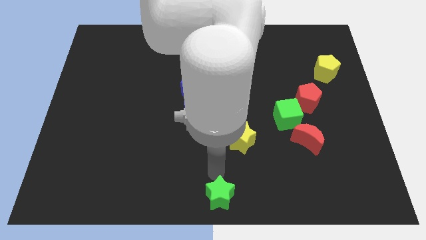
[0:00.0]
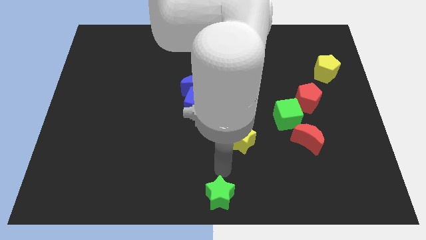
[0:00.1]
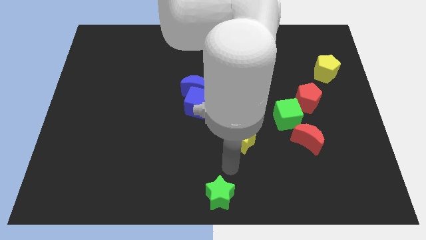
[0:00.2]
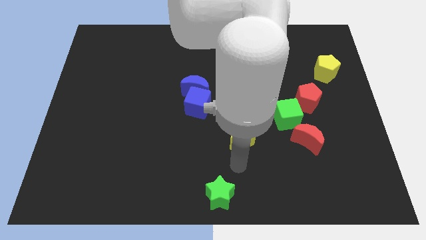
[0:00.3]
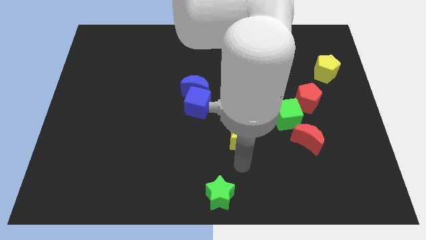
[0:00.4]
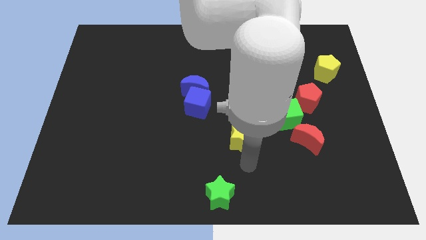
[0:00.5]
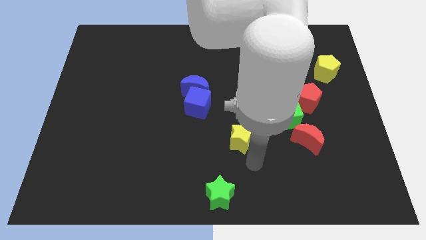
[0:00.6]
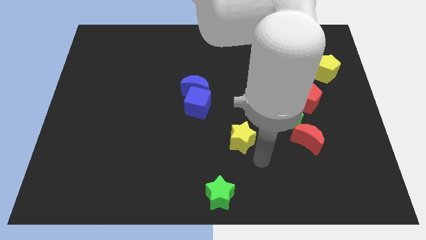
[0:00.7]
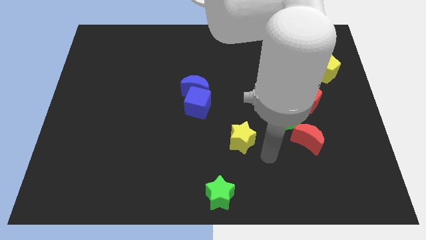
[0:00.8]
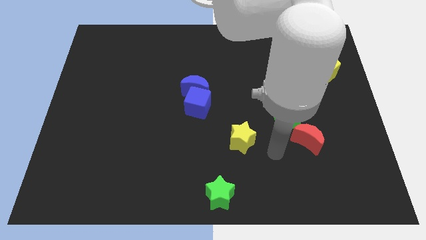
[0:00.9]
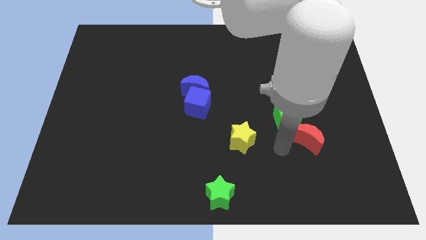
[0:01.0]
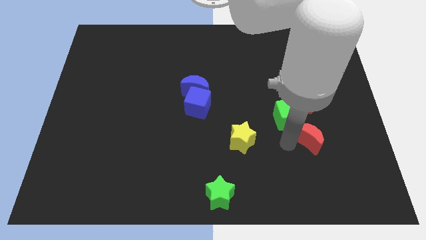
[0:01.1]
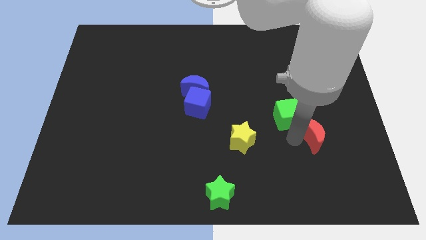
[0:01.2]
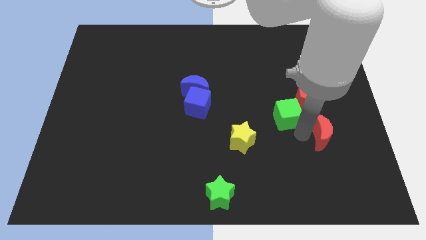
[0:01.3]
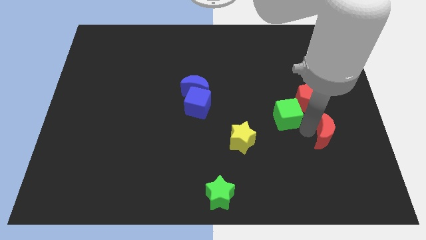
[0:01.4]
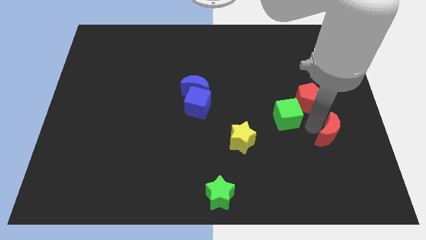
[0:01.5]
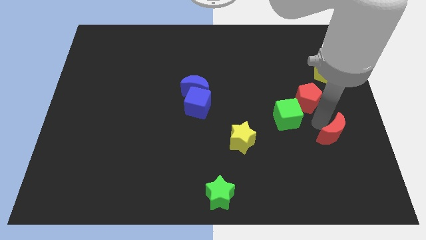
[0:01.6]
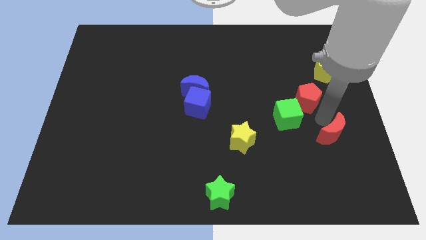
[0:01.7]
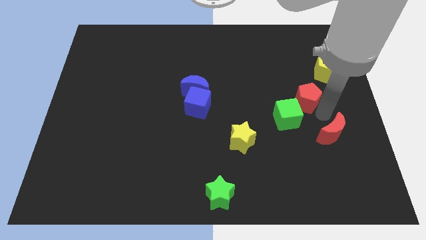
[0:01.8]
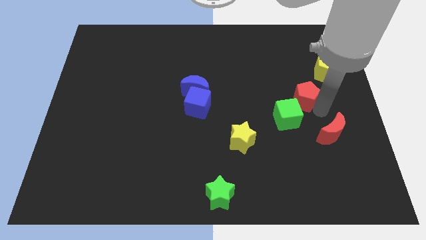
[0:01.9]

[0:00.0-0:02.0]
move the red moon slightly to the right

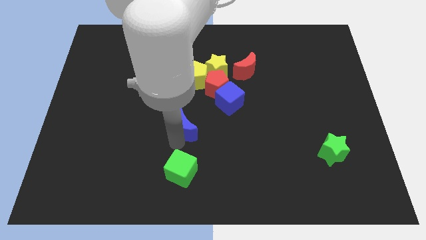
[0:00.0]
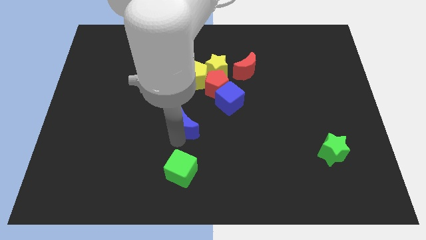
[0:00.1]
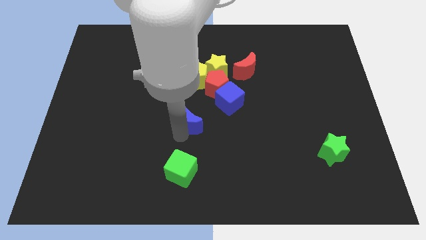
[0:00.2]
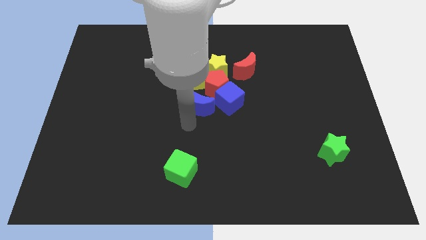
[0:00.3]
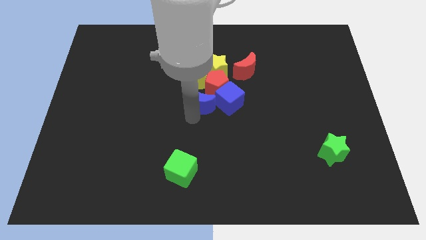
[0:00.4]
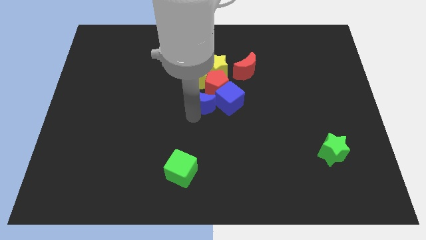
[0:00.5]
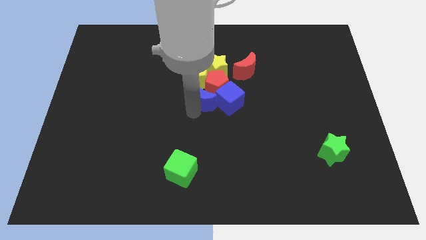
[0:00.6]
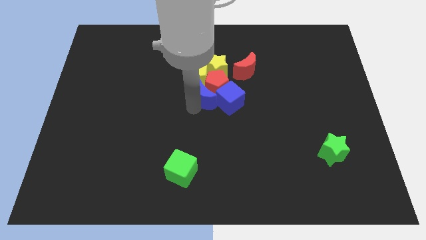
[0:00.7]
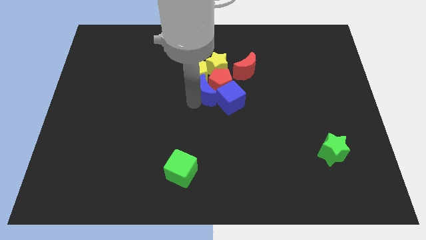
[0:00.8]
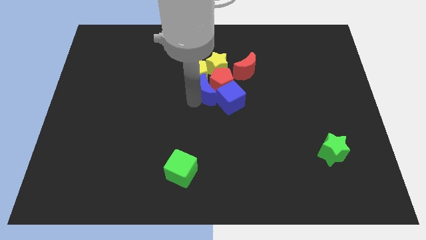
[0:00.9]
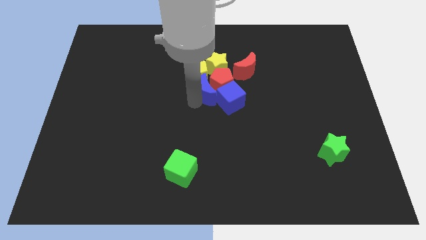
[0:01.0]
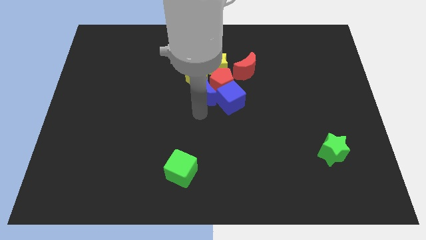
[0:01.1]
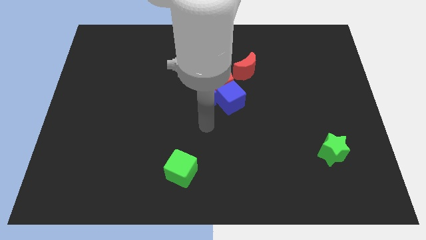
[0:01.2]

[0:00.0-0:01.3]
push the blue moon into the red pentagon

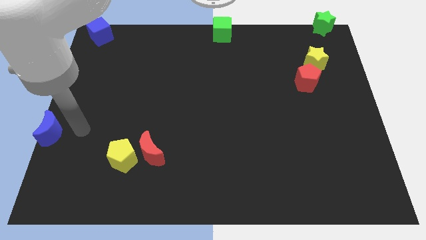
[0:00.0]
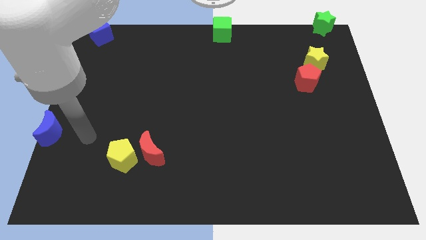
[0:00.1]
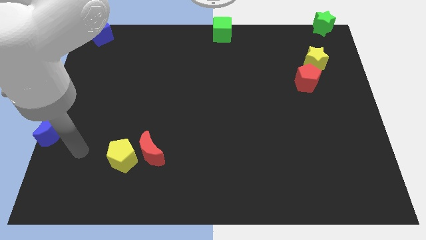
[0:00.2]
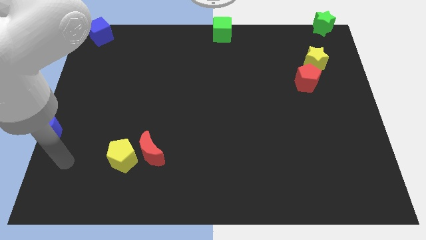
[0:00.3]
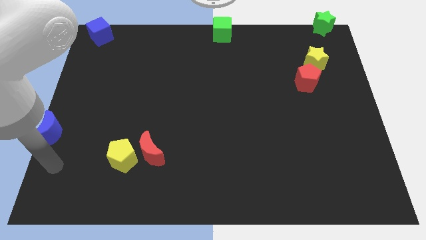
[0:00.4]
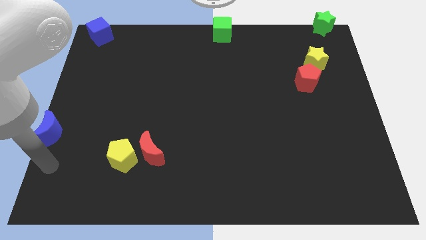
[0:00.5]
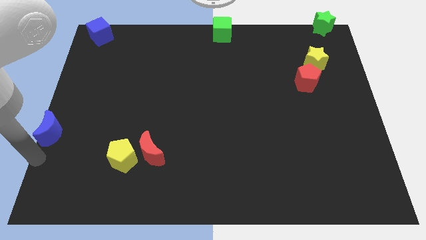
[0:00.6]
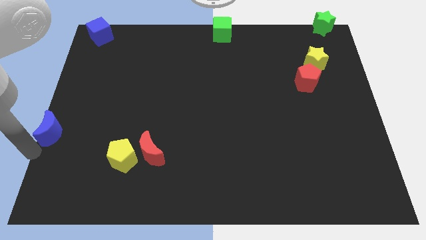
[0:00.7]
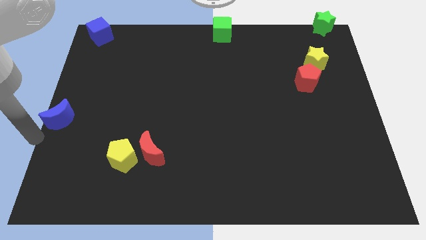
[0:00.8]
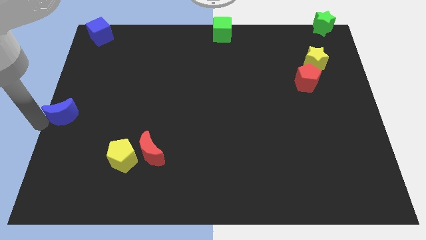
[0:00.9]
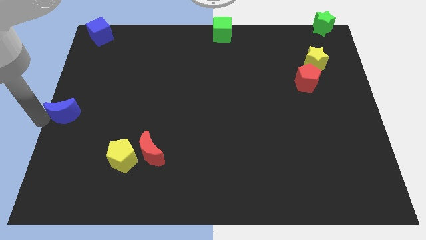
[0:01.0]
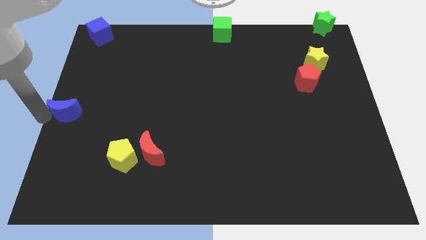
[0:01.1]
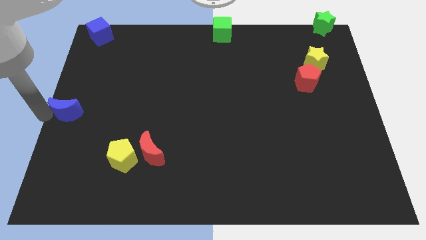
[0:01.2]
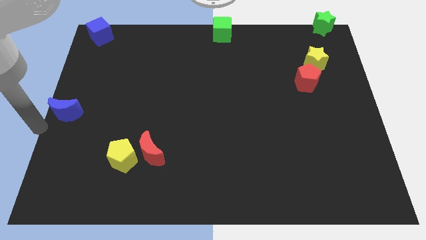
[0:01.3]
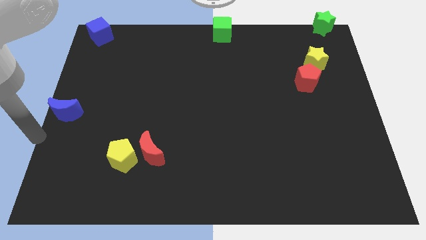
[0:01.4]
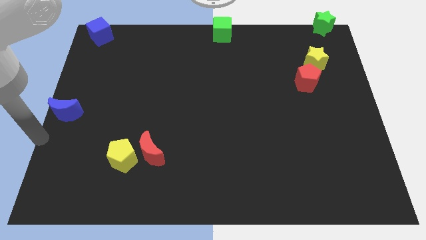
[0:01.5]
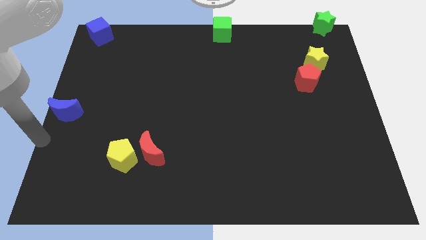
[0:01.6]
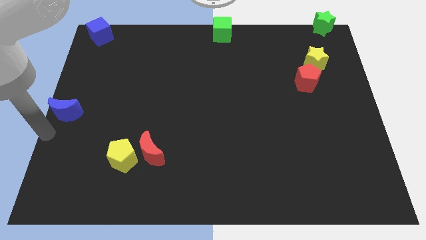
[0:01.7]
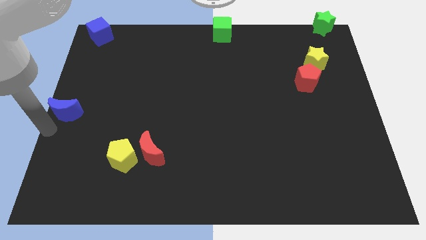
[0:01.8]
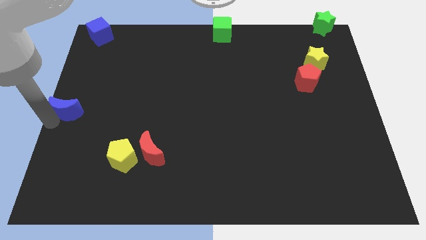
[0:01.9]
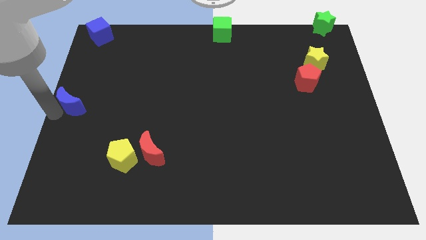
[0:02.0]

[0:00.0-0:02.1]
place blue moon in the center left

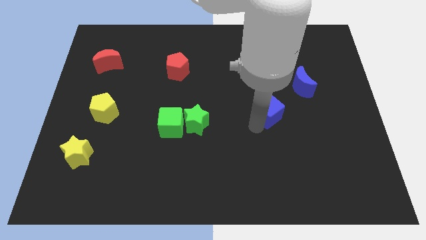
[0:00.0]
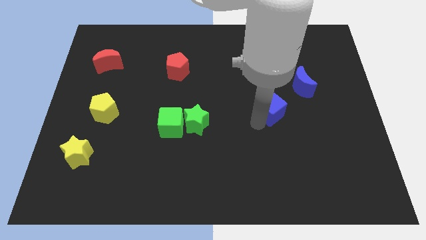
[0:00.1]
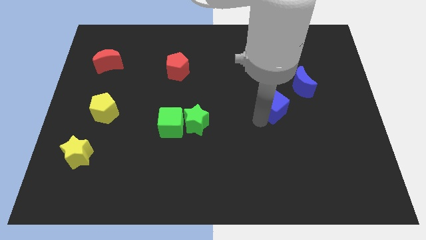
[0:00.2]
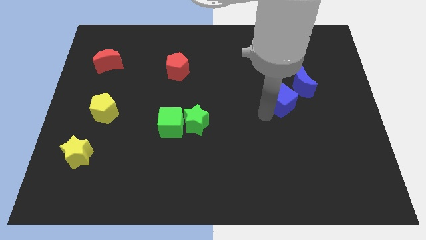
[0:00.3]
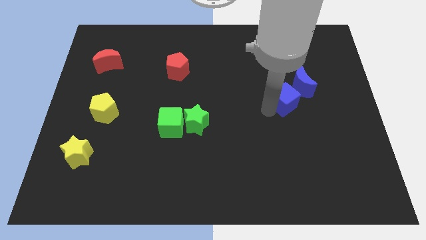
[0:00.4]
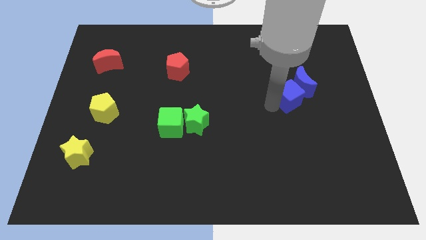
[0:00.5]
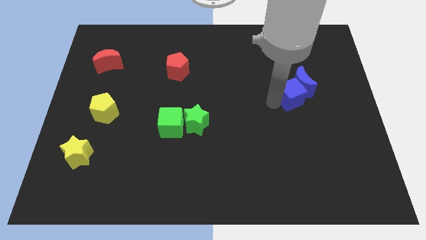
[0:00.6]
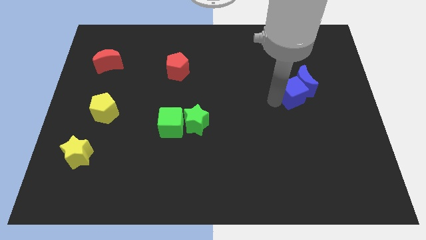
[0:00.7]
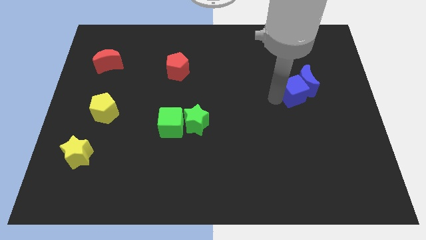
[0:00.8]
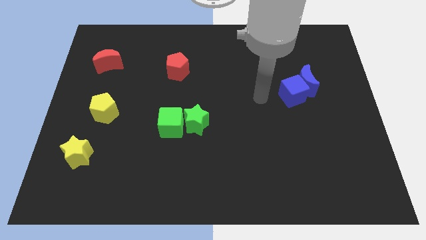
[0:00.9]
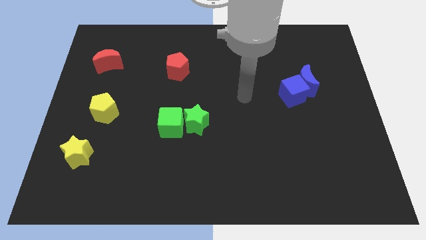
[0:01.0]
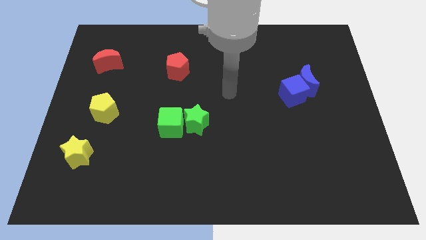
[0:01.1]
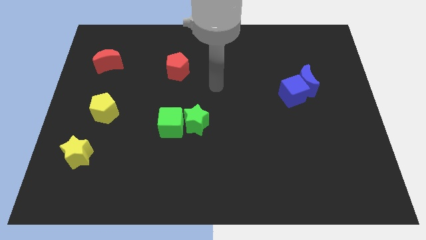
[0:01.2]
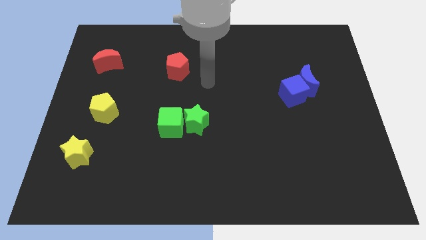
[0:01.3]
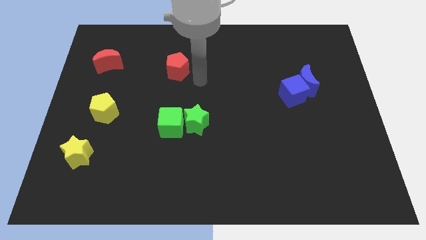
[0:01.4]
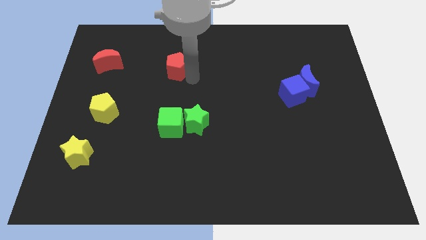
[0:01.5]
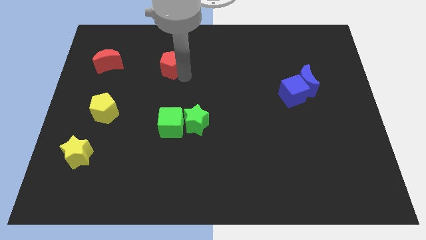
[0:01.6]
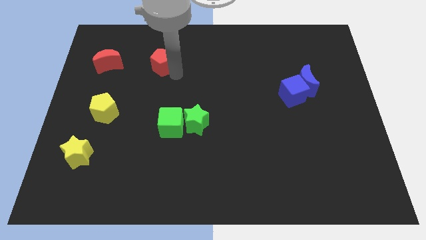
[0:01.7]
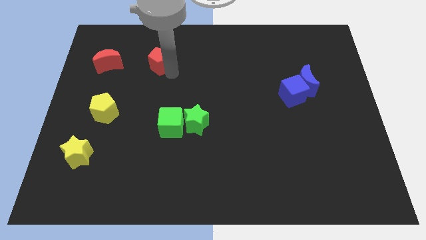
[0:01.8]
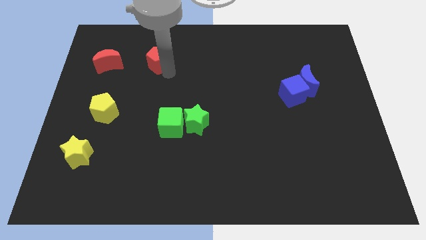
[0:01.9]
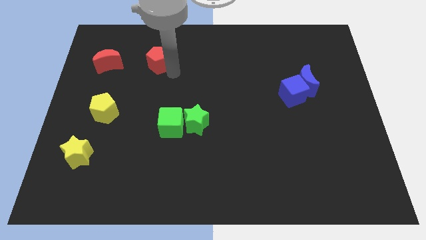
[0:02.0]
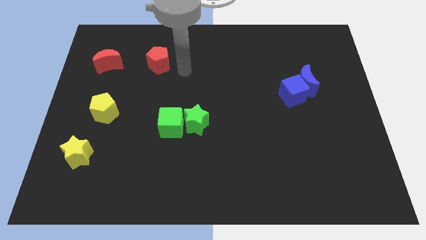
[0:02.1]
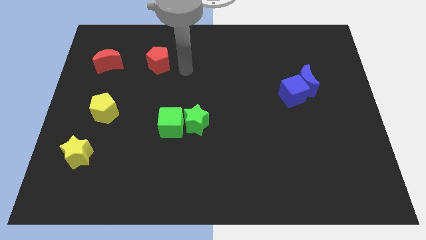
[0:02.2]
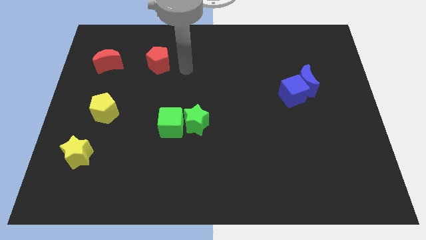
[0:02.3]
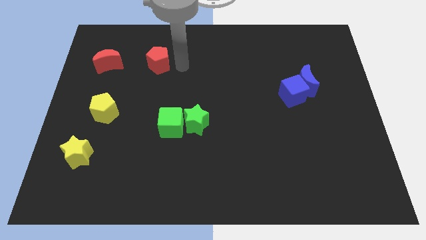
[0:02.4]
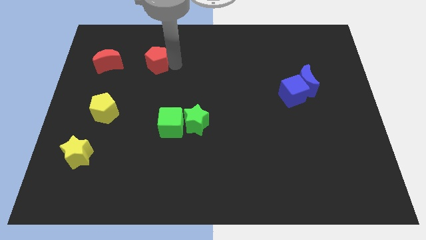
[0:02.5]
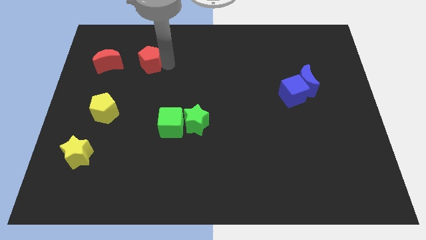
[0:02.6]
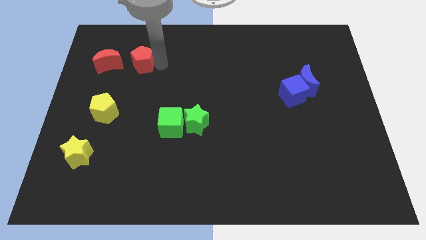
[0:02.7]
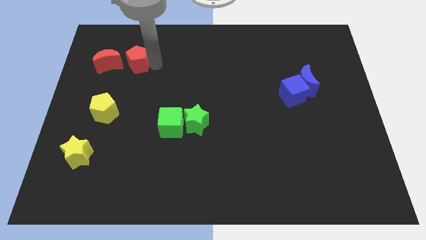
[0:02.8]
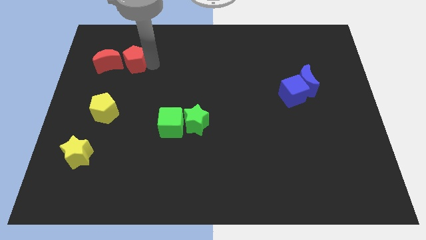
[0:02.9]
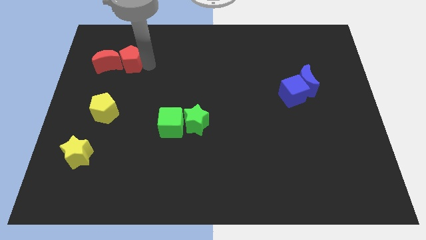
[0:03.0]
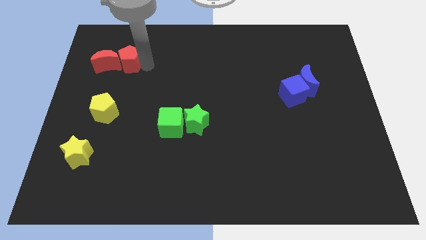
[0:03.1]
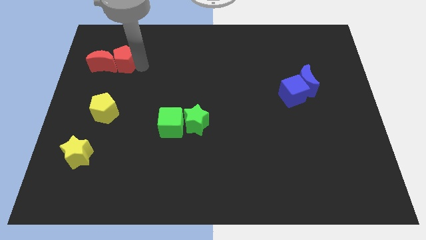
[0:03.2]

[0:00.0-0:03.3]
move red pentagon into red moon

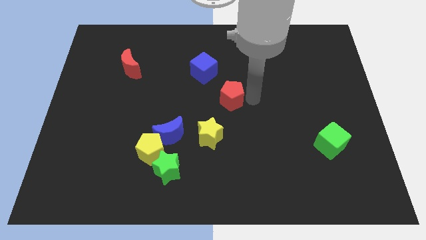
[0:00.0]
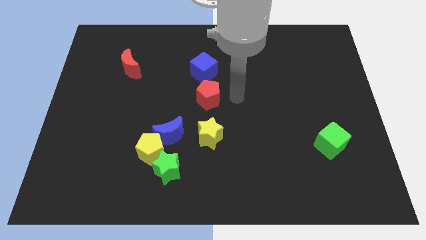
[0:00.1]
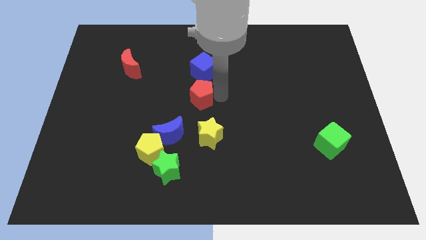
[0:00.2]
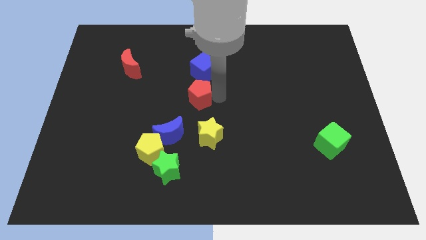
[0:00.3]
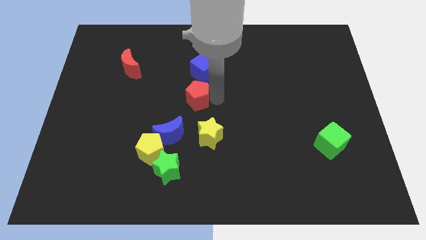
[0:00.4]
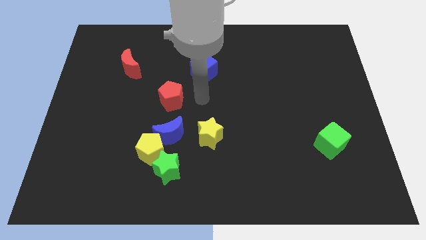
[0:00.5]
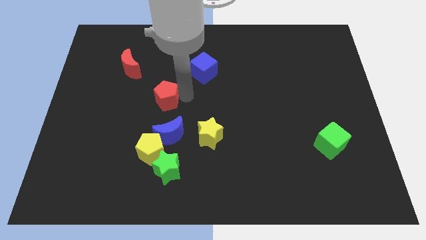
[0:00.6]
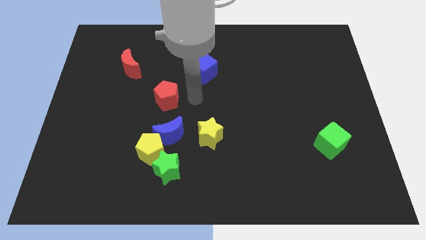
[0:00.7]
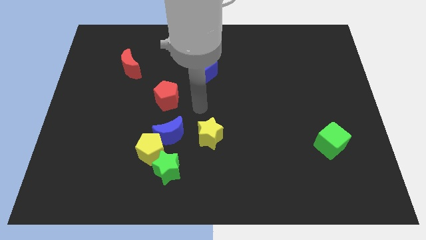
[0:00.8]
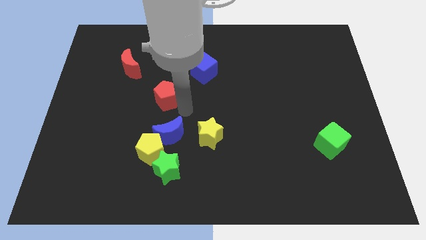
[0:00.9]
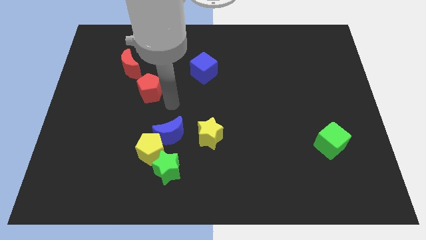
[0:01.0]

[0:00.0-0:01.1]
push the red pentagon towards the red moon
